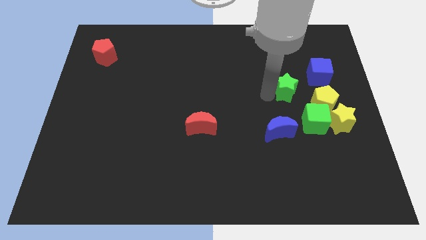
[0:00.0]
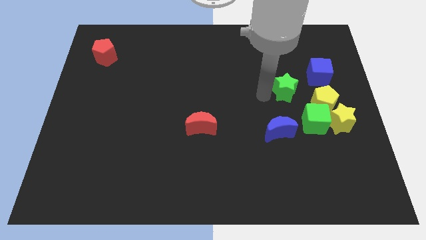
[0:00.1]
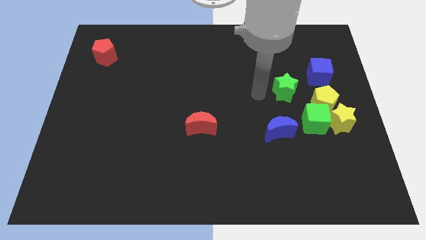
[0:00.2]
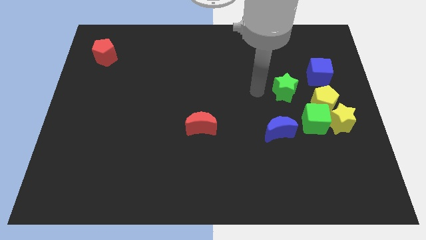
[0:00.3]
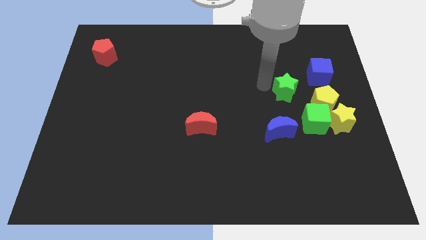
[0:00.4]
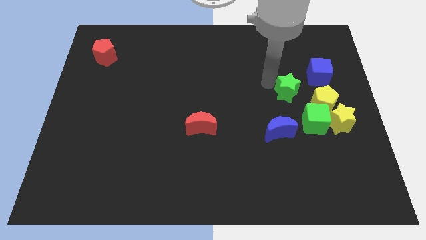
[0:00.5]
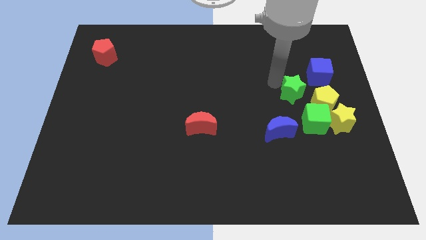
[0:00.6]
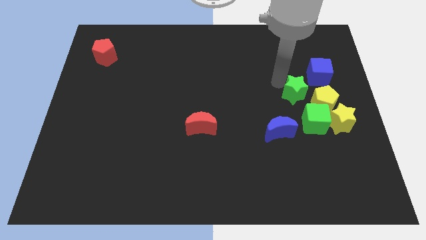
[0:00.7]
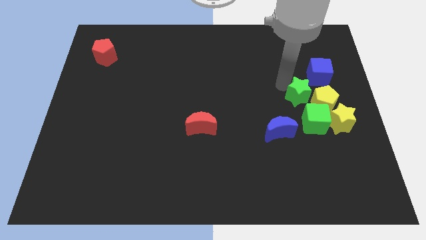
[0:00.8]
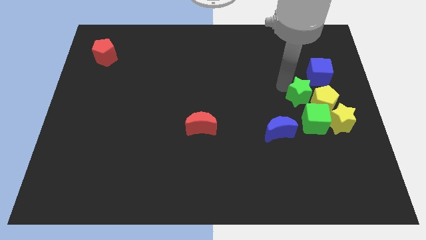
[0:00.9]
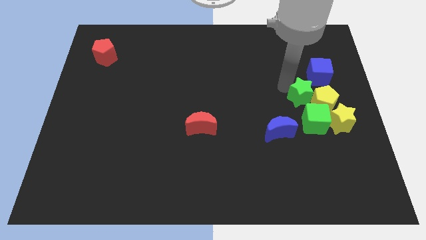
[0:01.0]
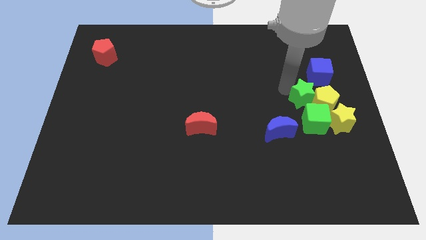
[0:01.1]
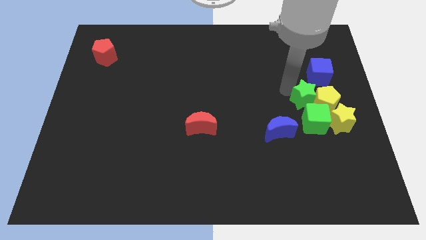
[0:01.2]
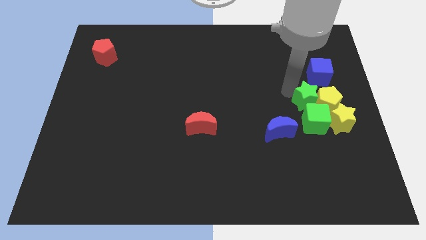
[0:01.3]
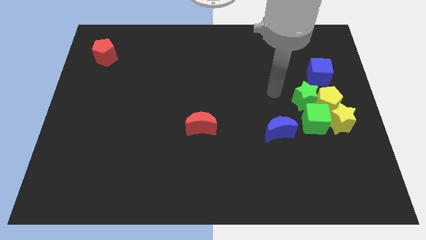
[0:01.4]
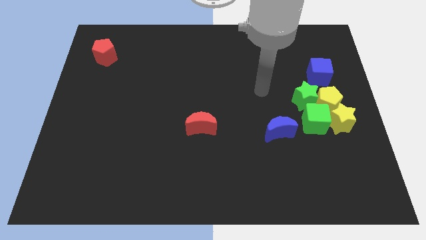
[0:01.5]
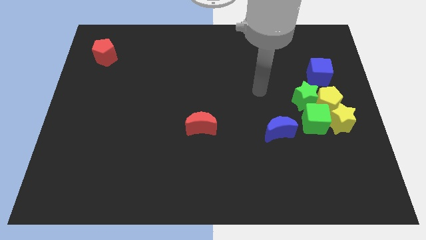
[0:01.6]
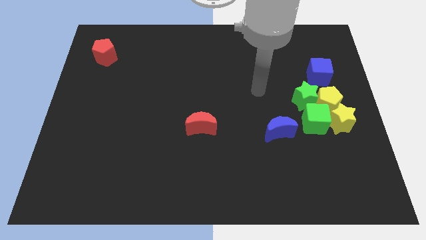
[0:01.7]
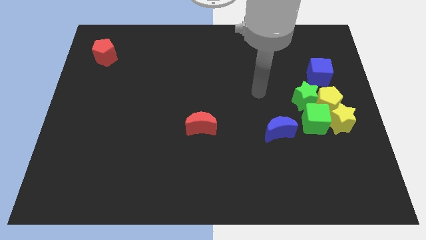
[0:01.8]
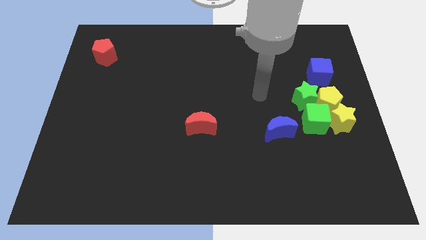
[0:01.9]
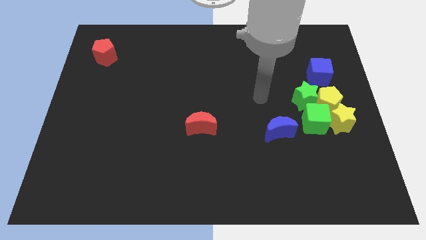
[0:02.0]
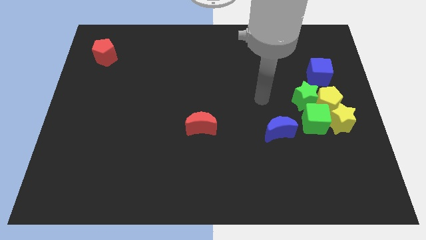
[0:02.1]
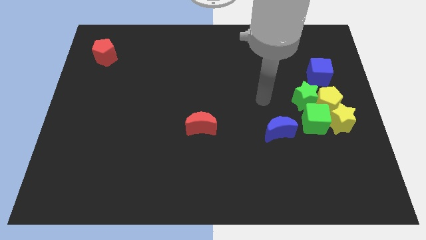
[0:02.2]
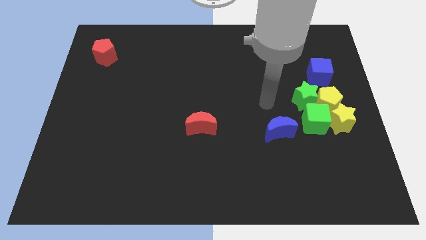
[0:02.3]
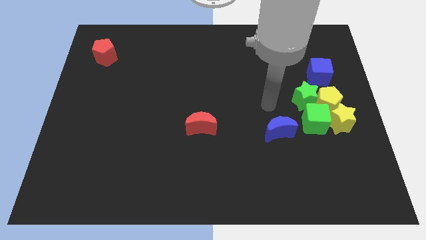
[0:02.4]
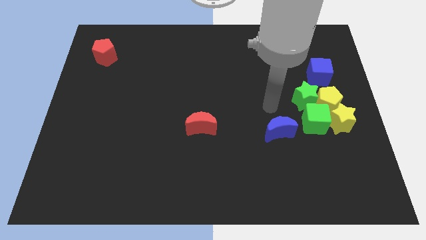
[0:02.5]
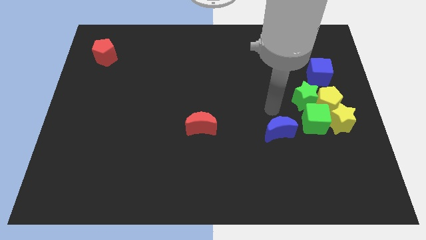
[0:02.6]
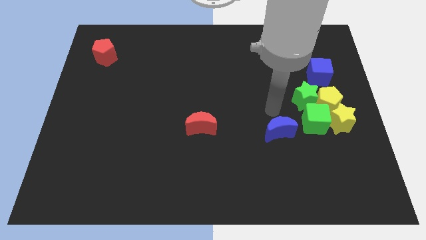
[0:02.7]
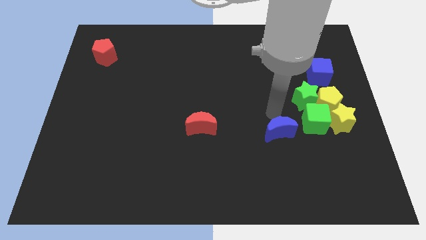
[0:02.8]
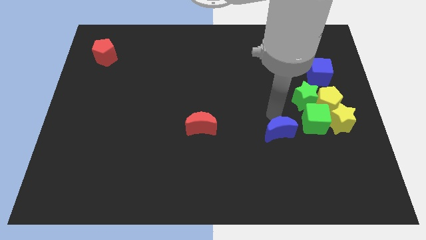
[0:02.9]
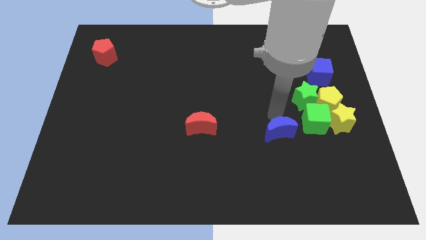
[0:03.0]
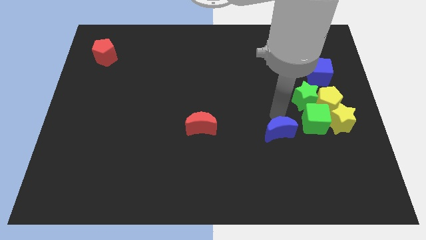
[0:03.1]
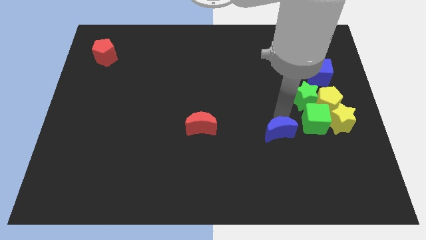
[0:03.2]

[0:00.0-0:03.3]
move the green star to the top side of the green cube

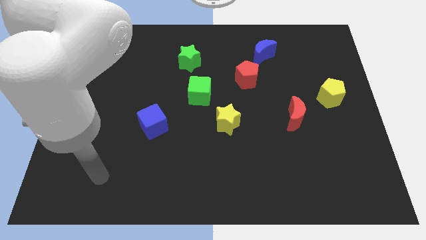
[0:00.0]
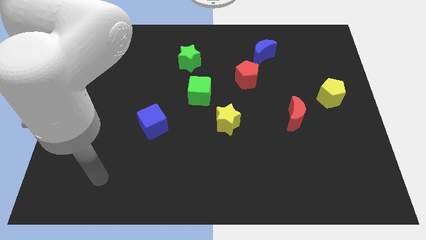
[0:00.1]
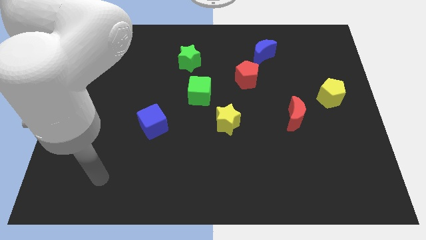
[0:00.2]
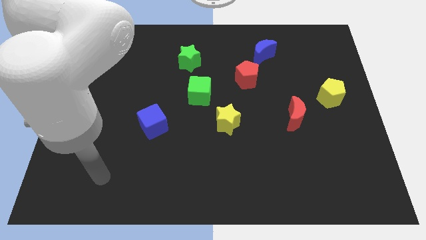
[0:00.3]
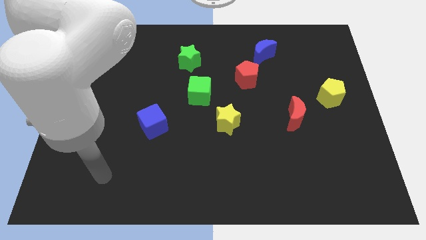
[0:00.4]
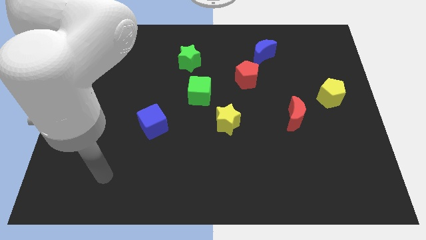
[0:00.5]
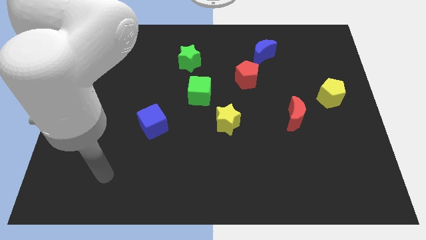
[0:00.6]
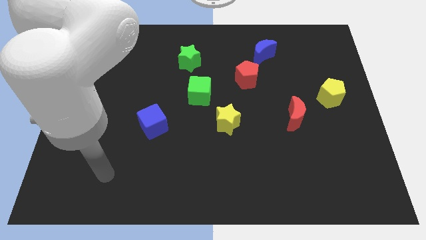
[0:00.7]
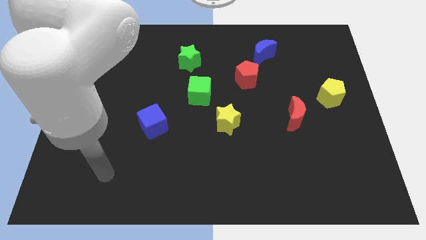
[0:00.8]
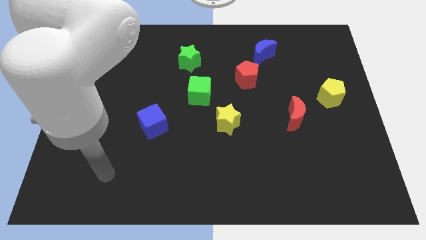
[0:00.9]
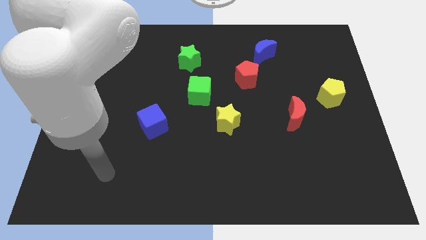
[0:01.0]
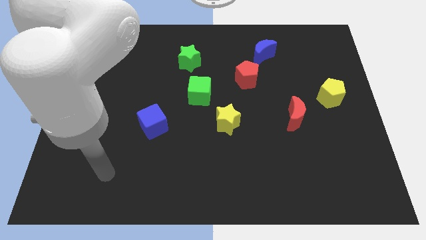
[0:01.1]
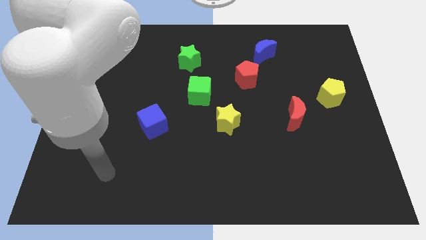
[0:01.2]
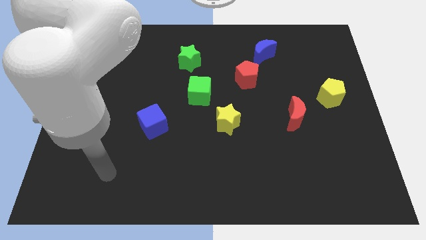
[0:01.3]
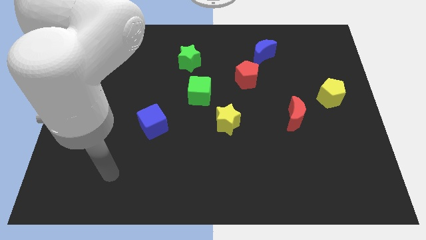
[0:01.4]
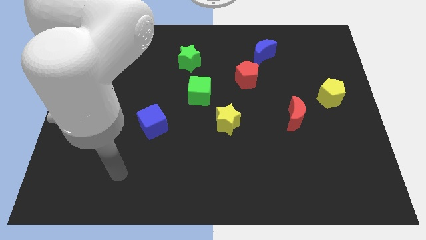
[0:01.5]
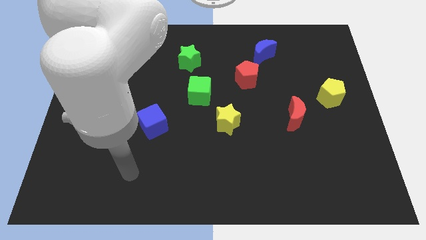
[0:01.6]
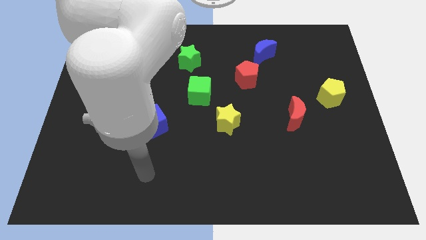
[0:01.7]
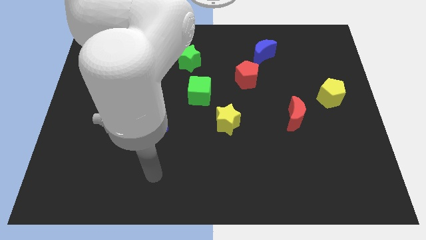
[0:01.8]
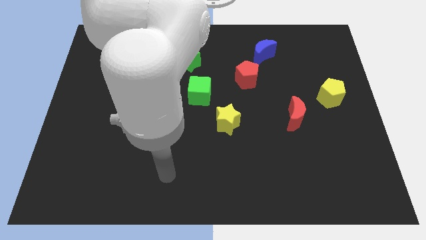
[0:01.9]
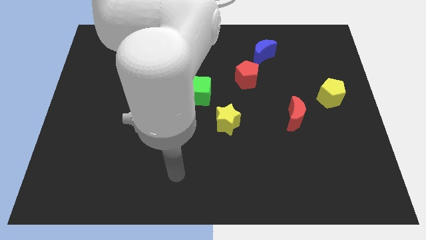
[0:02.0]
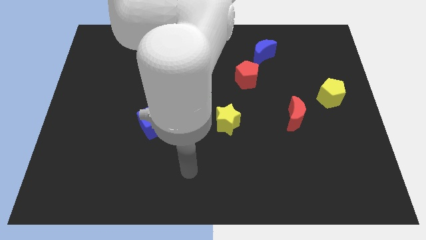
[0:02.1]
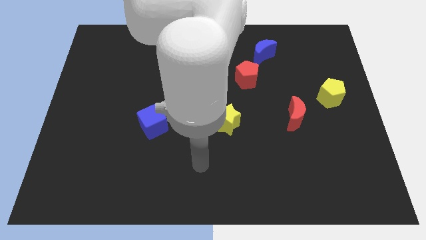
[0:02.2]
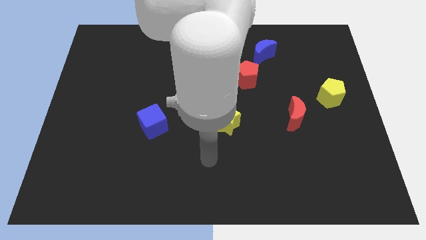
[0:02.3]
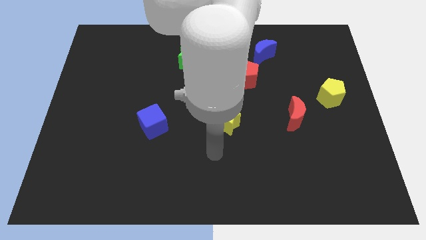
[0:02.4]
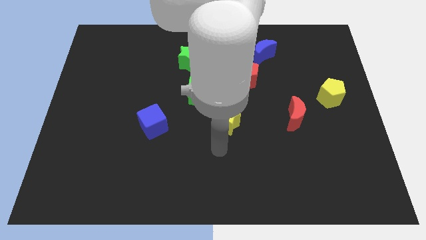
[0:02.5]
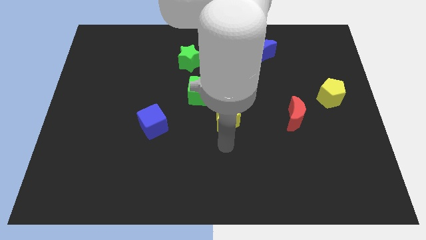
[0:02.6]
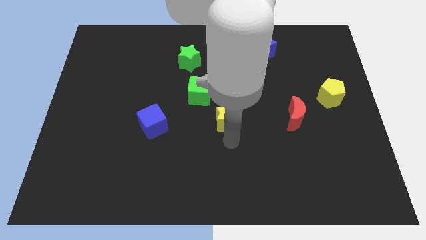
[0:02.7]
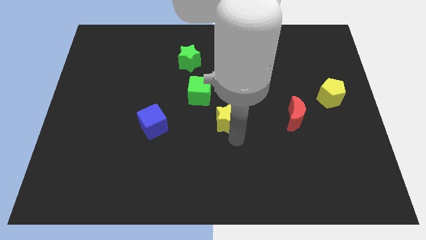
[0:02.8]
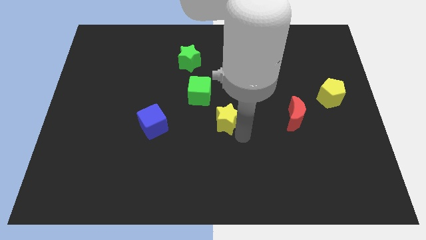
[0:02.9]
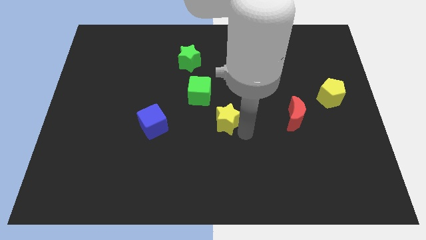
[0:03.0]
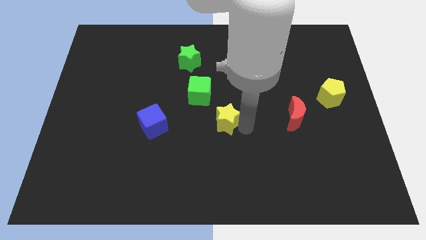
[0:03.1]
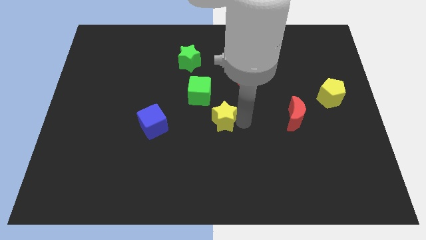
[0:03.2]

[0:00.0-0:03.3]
move the arm near yellow star

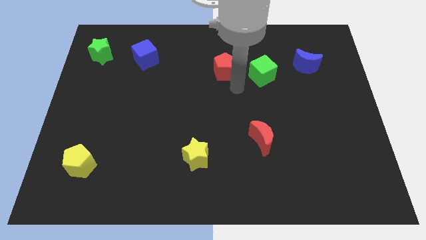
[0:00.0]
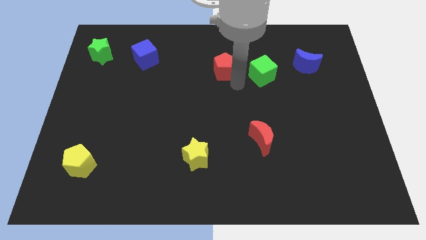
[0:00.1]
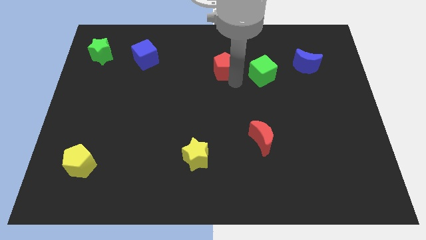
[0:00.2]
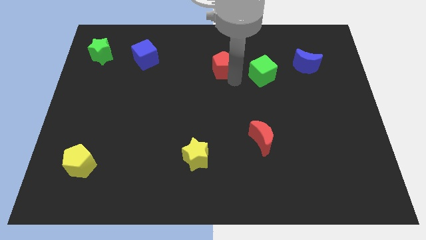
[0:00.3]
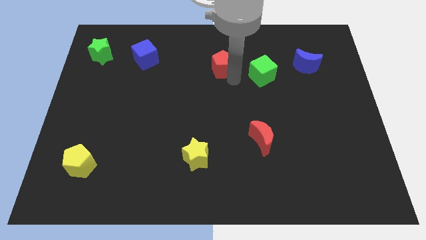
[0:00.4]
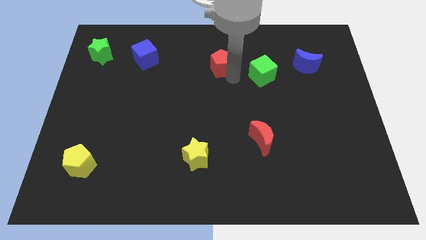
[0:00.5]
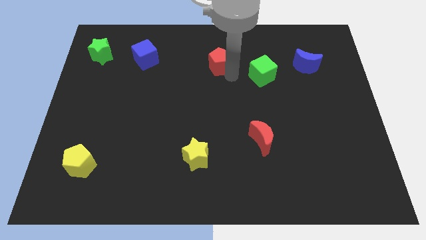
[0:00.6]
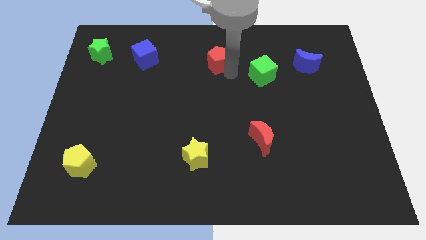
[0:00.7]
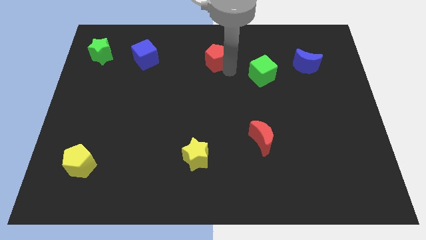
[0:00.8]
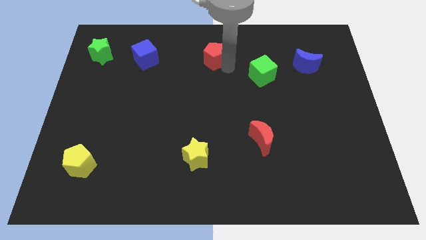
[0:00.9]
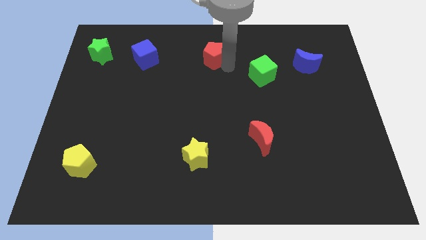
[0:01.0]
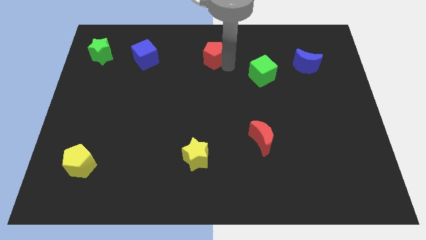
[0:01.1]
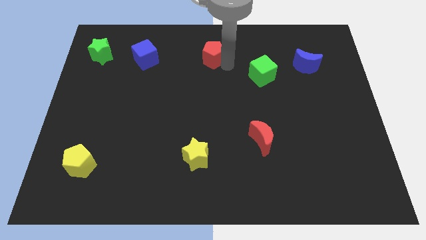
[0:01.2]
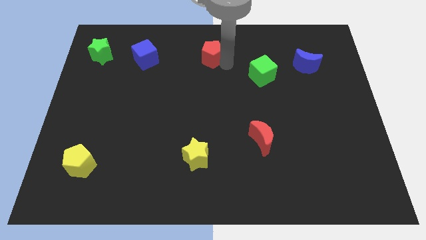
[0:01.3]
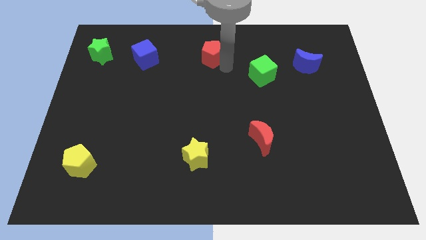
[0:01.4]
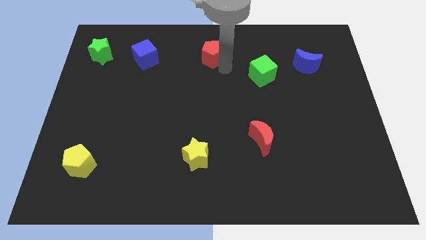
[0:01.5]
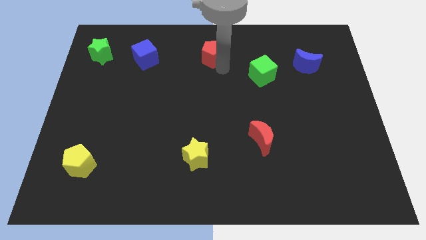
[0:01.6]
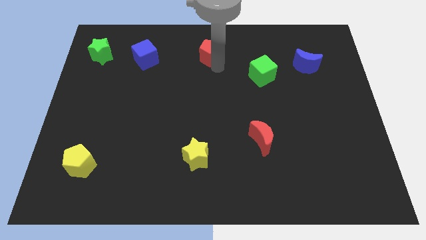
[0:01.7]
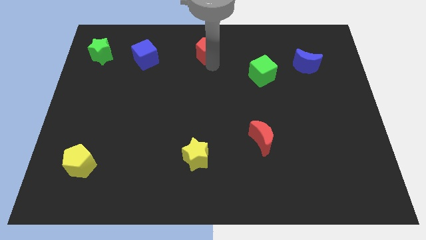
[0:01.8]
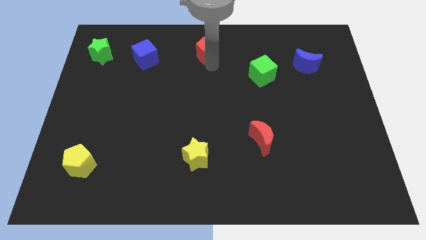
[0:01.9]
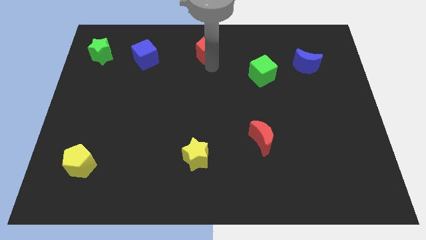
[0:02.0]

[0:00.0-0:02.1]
move the red pentagon to the center top

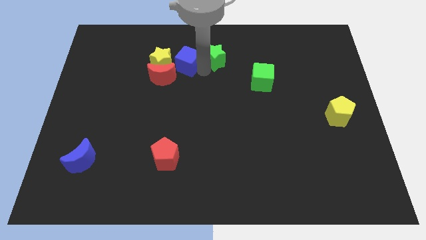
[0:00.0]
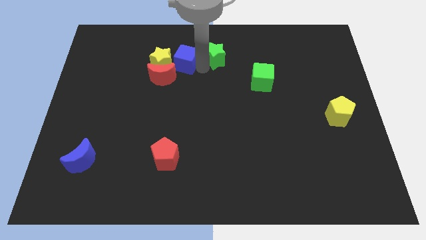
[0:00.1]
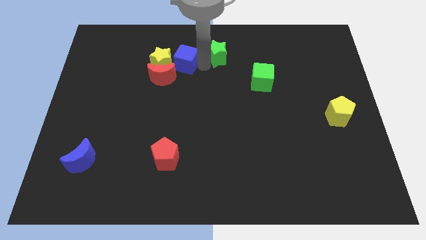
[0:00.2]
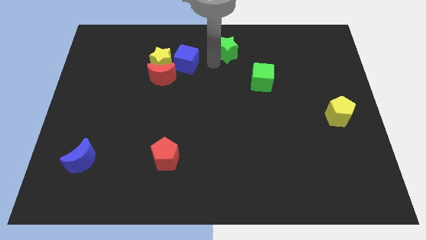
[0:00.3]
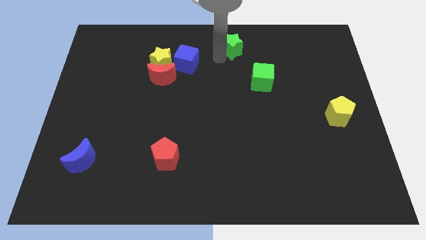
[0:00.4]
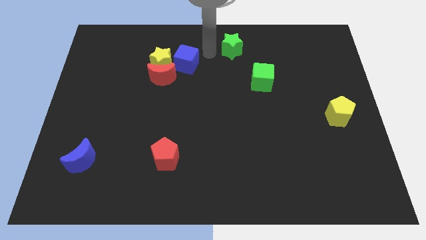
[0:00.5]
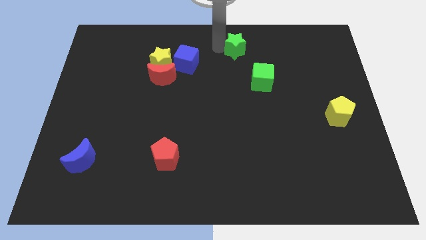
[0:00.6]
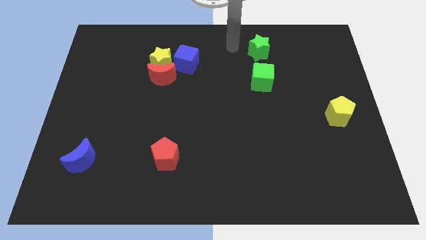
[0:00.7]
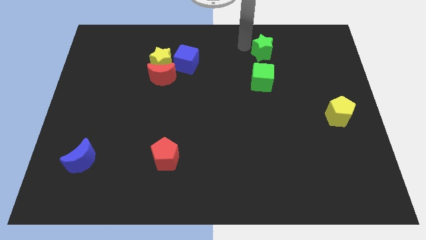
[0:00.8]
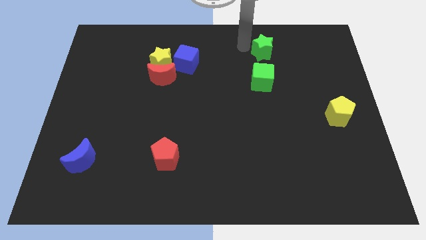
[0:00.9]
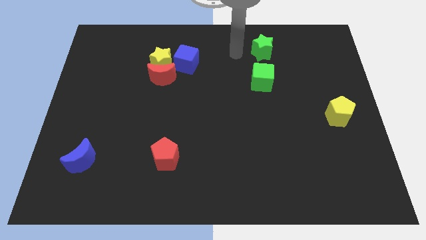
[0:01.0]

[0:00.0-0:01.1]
separate green star from blue cube
